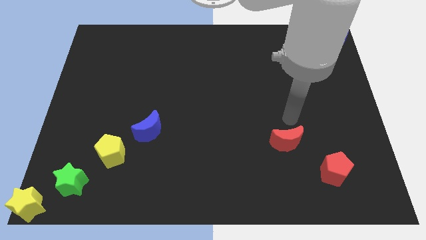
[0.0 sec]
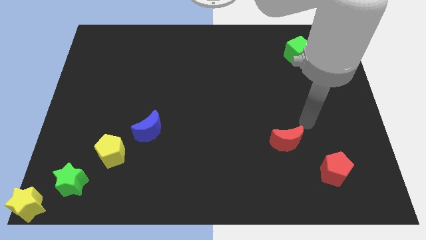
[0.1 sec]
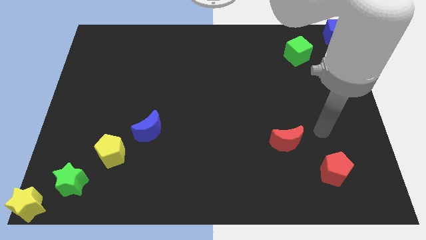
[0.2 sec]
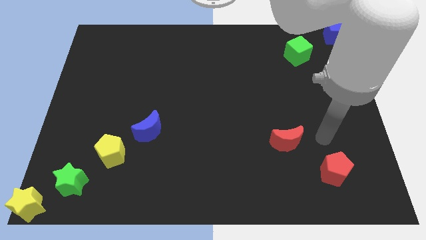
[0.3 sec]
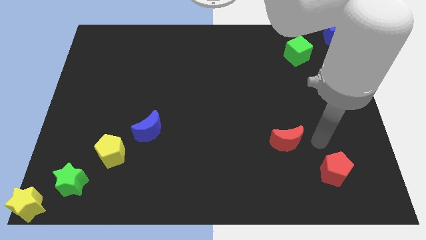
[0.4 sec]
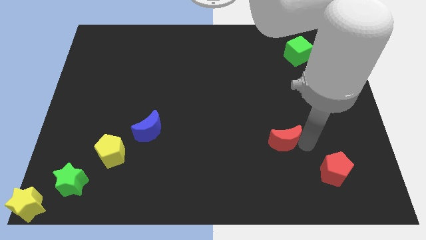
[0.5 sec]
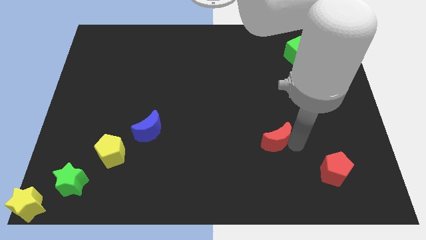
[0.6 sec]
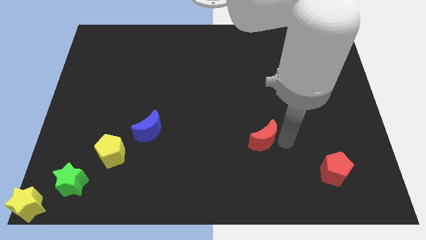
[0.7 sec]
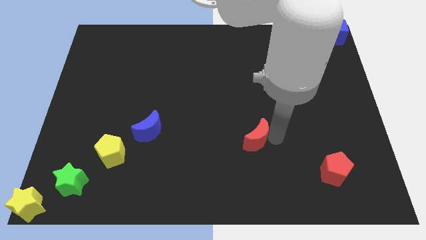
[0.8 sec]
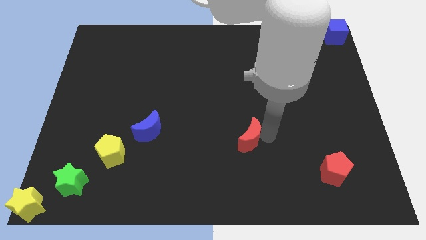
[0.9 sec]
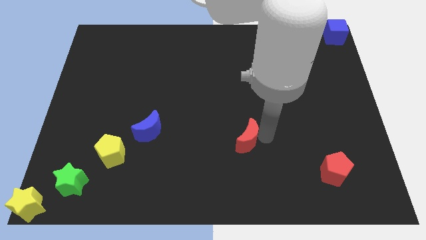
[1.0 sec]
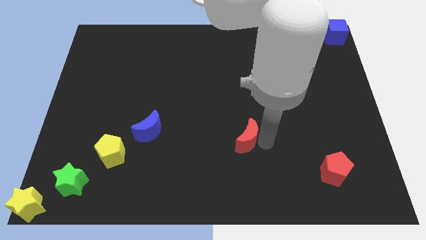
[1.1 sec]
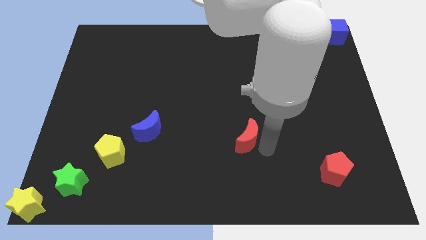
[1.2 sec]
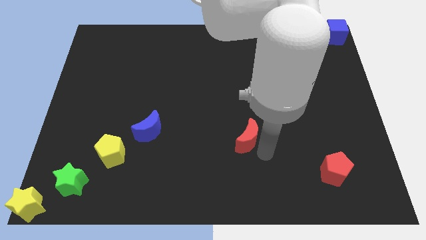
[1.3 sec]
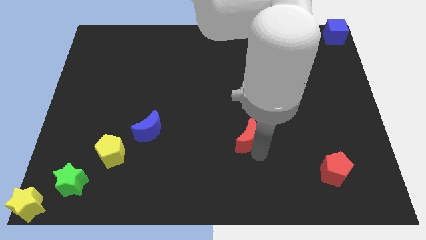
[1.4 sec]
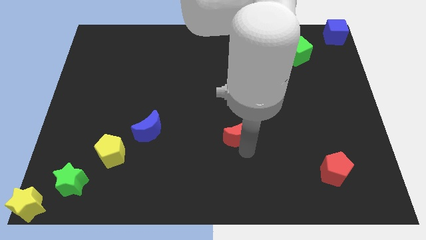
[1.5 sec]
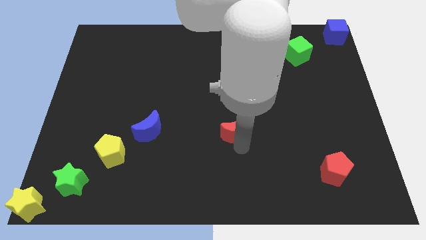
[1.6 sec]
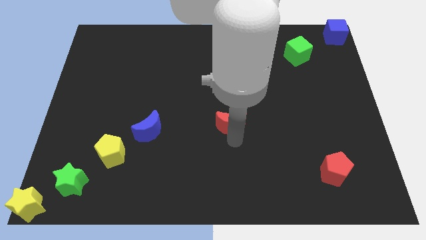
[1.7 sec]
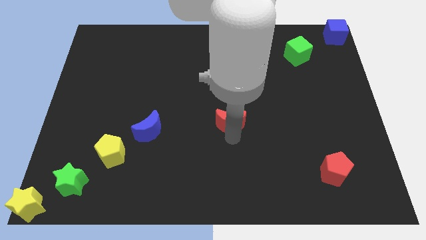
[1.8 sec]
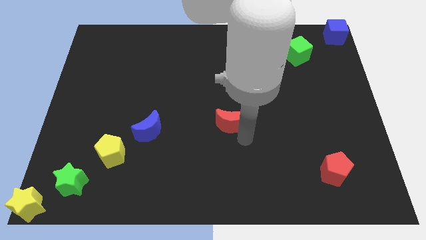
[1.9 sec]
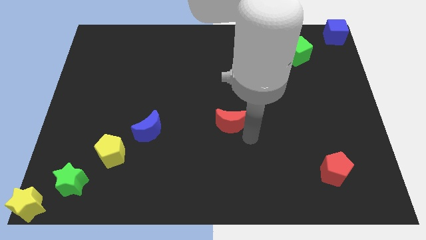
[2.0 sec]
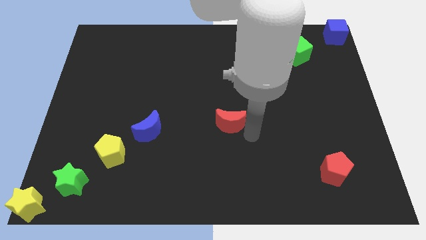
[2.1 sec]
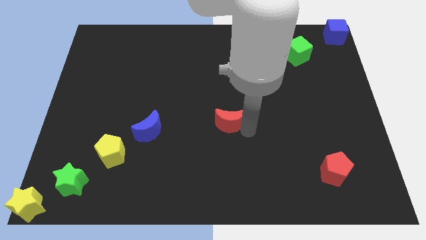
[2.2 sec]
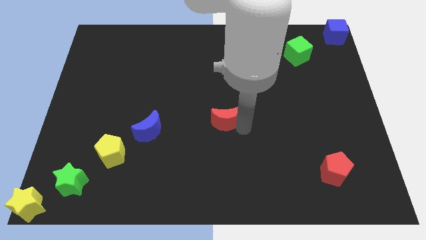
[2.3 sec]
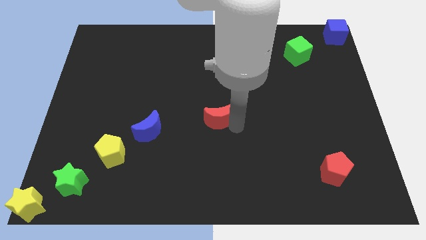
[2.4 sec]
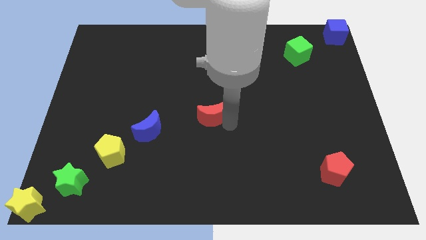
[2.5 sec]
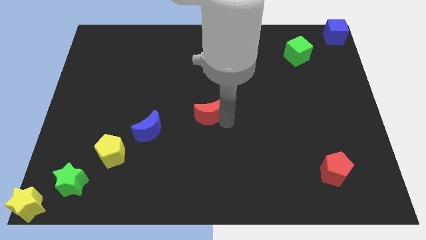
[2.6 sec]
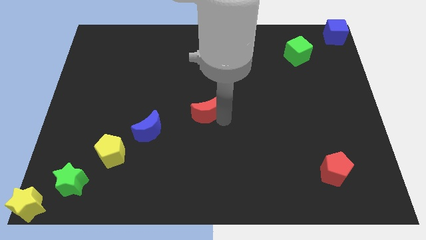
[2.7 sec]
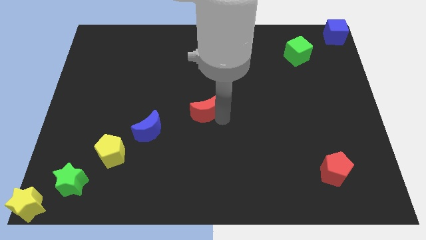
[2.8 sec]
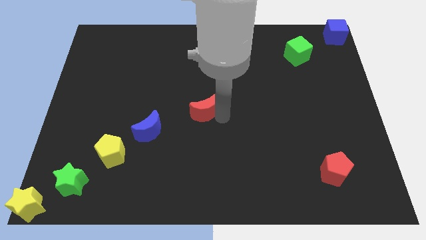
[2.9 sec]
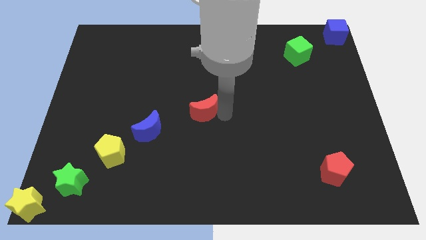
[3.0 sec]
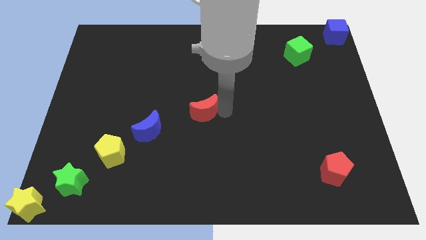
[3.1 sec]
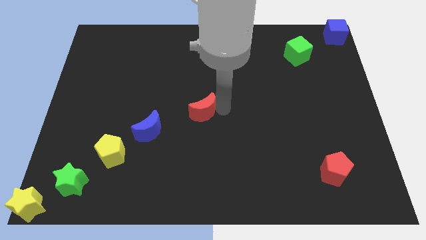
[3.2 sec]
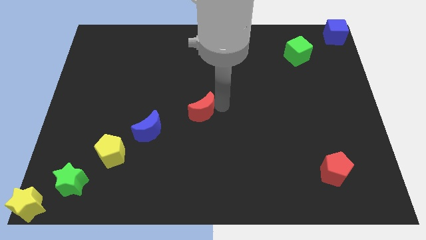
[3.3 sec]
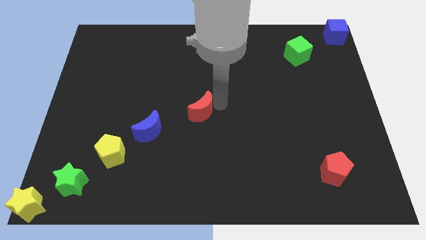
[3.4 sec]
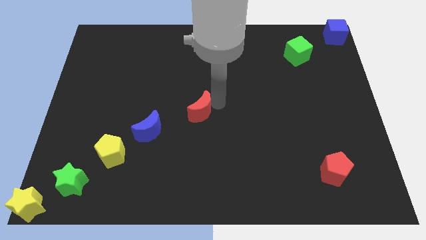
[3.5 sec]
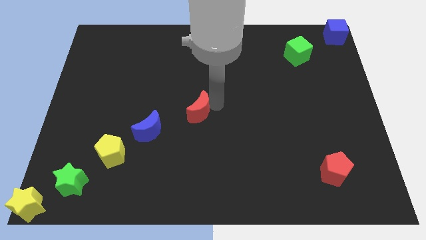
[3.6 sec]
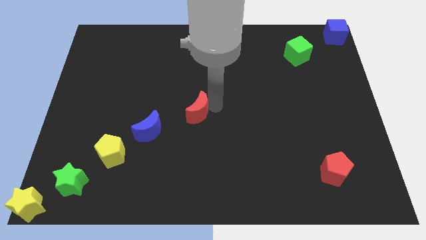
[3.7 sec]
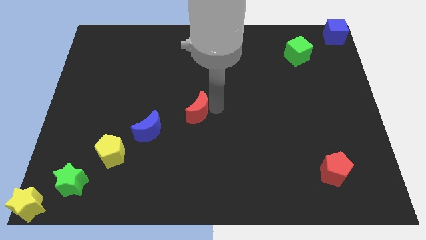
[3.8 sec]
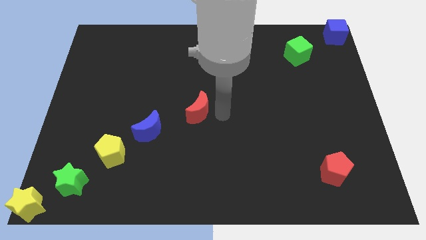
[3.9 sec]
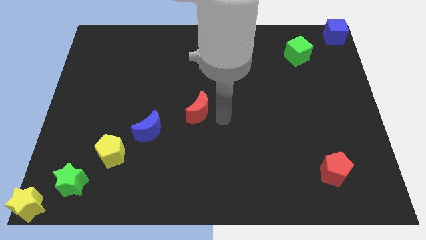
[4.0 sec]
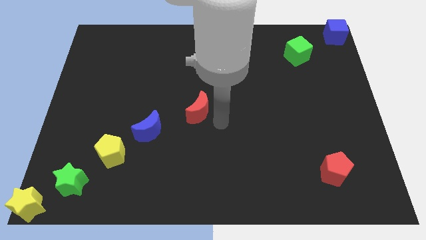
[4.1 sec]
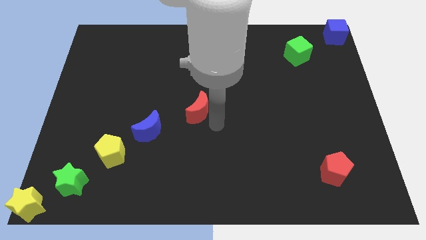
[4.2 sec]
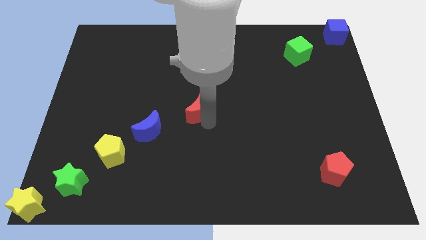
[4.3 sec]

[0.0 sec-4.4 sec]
place the red crescent diagonally with the group of blocks

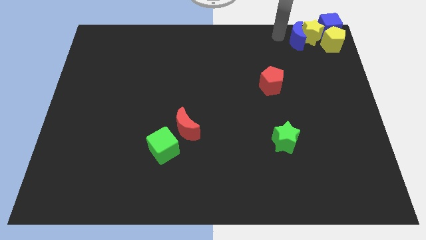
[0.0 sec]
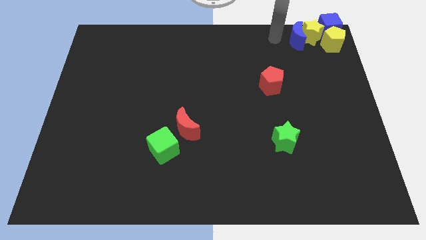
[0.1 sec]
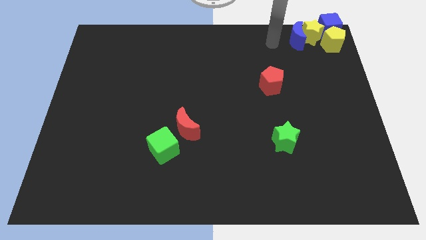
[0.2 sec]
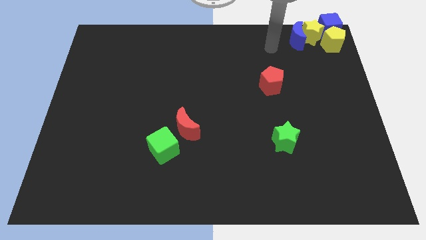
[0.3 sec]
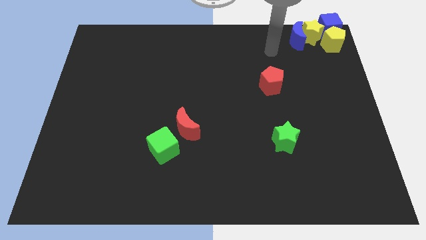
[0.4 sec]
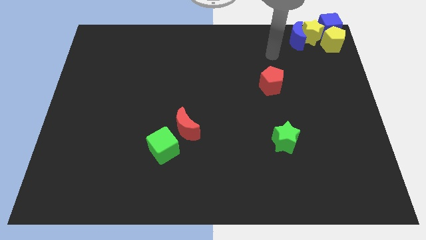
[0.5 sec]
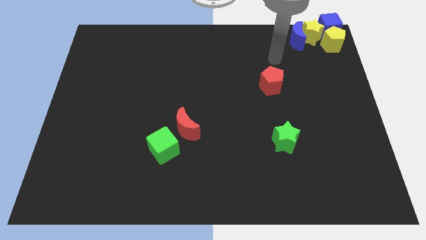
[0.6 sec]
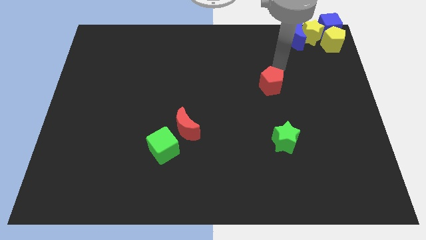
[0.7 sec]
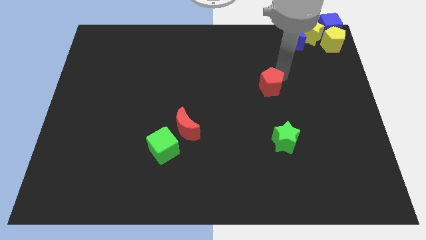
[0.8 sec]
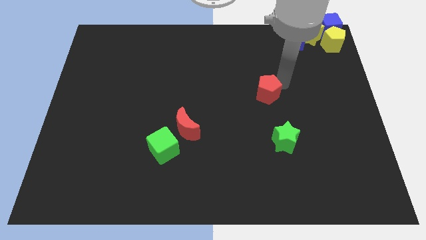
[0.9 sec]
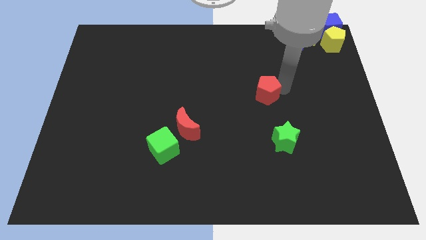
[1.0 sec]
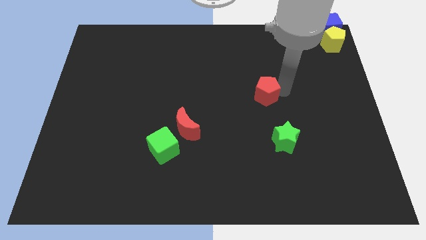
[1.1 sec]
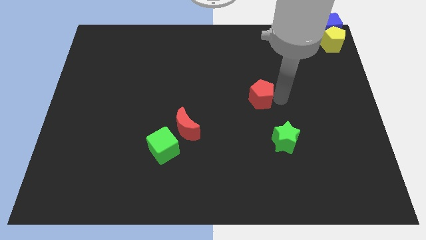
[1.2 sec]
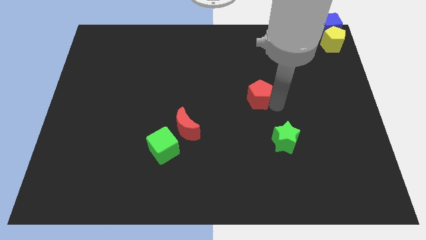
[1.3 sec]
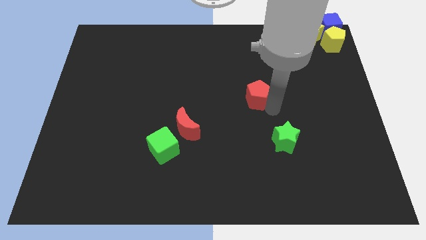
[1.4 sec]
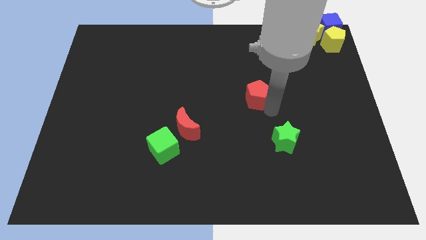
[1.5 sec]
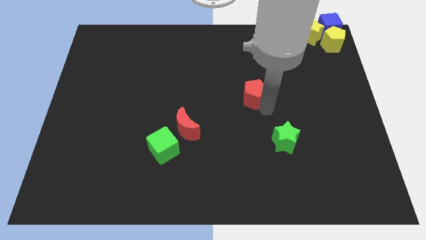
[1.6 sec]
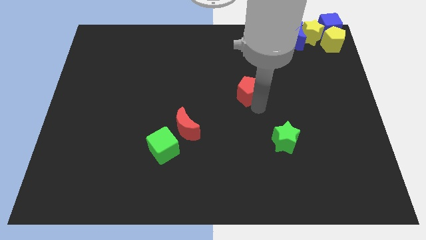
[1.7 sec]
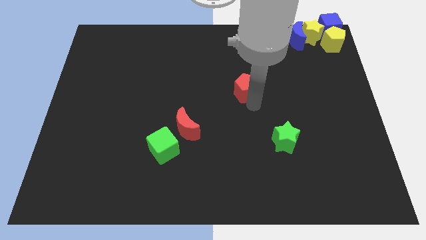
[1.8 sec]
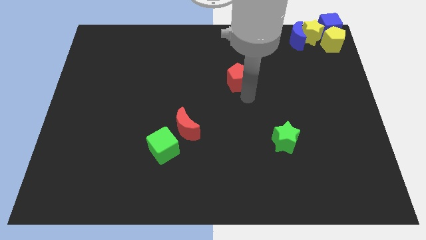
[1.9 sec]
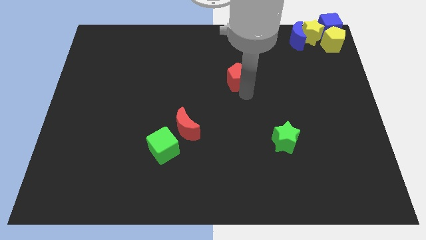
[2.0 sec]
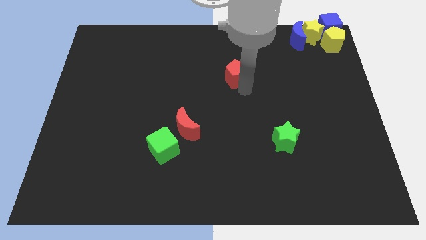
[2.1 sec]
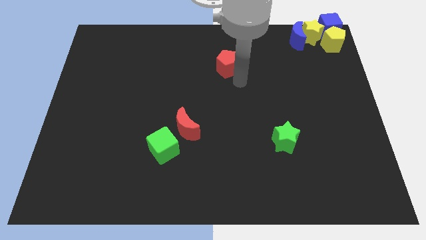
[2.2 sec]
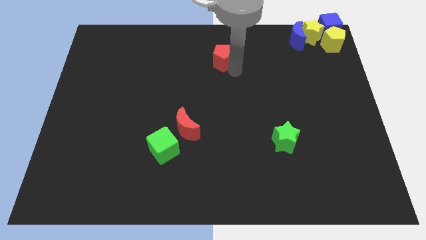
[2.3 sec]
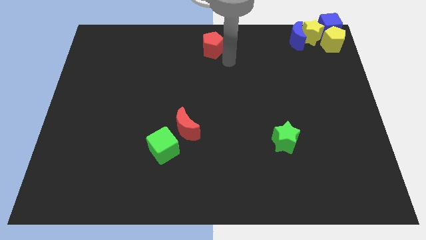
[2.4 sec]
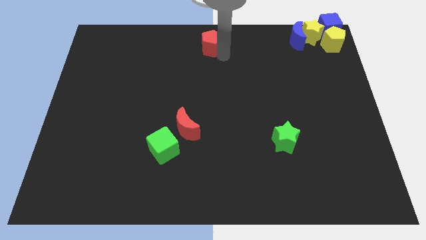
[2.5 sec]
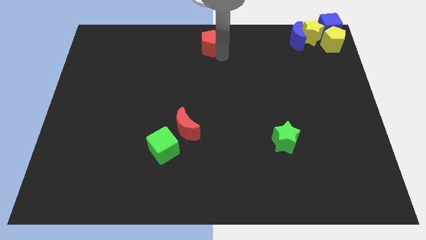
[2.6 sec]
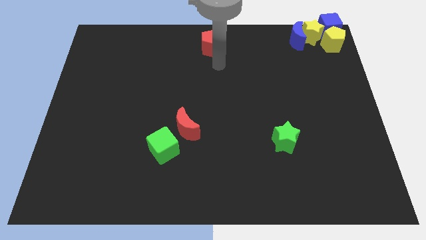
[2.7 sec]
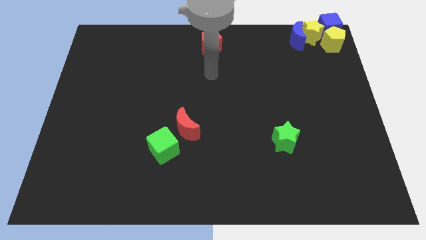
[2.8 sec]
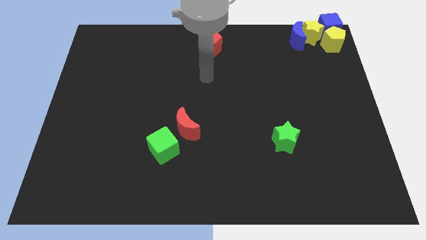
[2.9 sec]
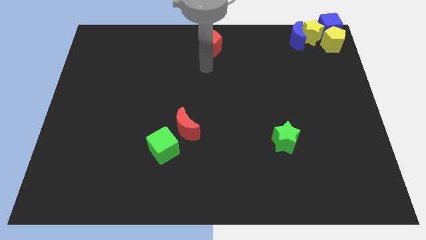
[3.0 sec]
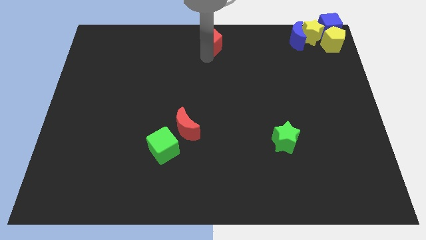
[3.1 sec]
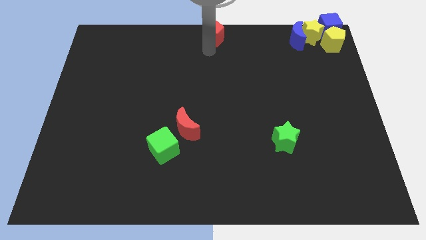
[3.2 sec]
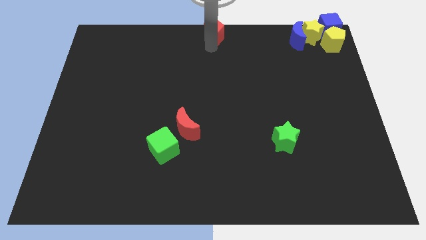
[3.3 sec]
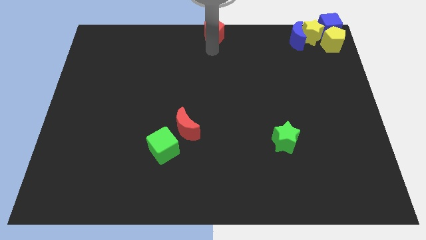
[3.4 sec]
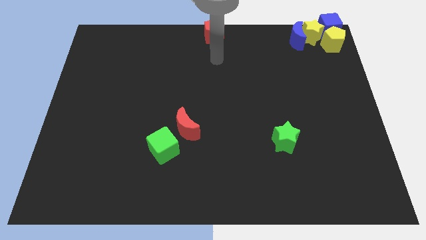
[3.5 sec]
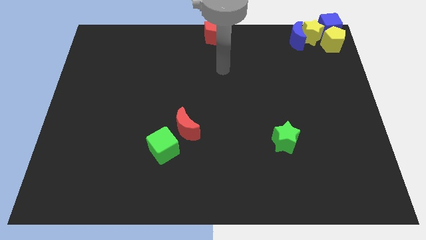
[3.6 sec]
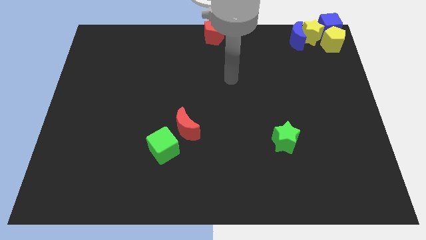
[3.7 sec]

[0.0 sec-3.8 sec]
slide the red pentagon to the top center of the board

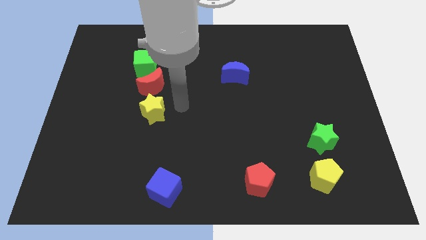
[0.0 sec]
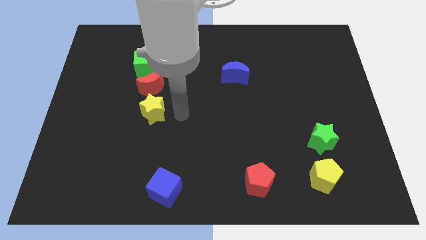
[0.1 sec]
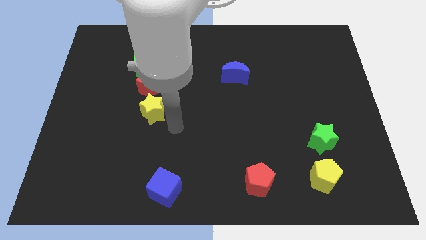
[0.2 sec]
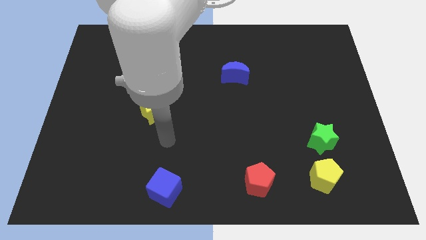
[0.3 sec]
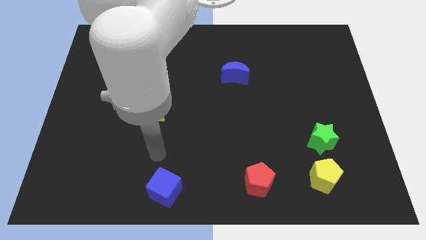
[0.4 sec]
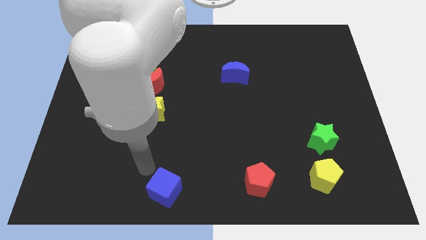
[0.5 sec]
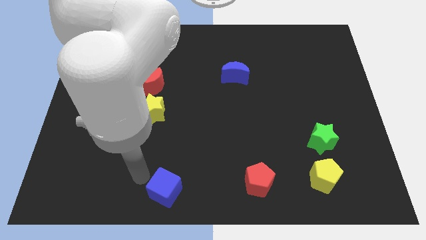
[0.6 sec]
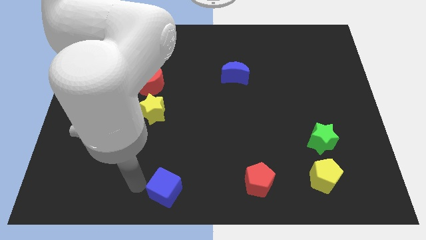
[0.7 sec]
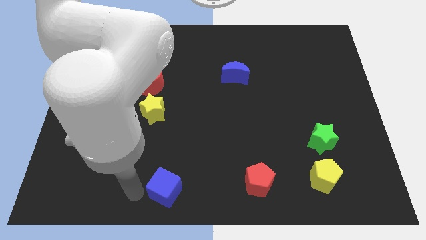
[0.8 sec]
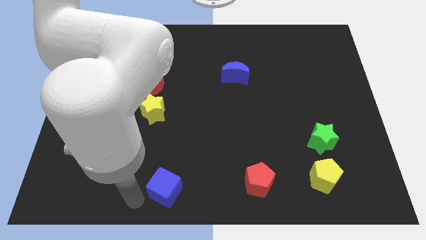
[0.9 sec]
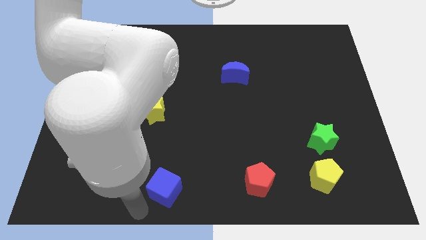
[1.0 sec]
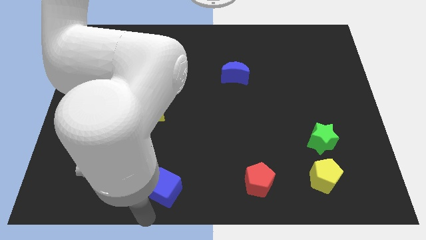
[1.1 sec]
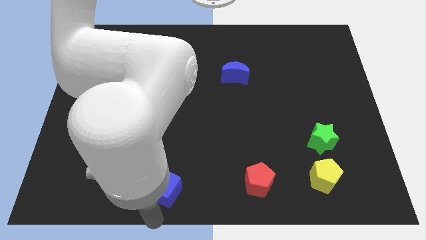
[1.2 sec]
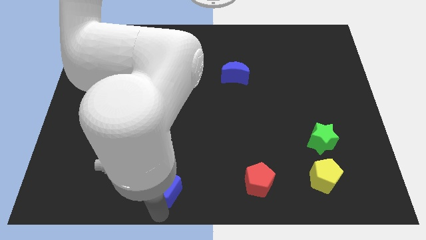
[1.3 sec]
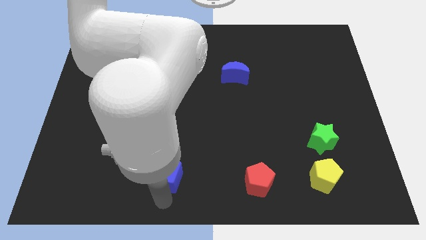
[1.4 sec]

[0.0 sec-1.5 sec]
move the blue cube slightly towards the top
